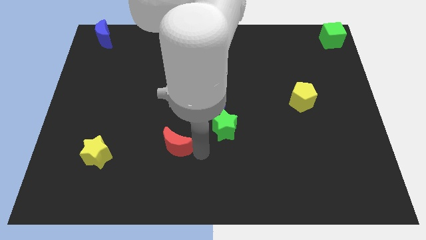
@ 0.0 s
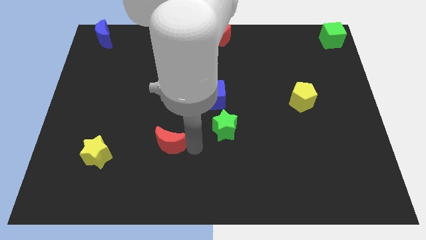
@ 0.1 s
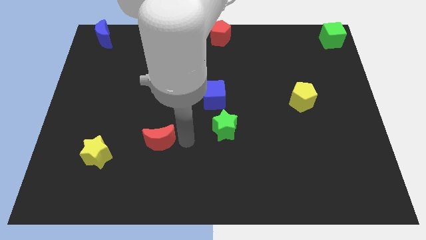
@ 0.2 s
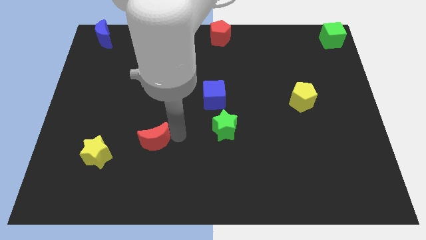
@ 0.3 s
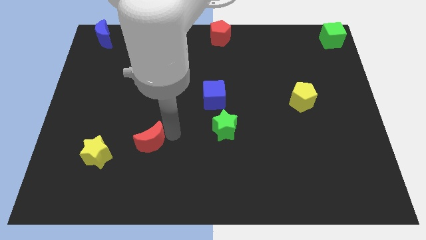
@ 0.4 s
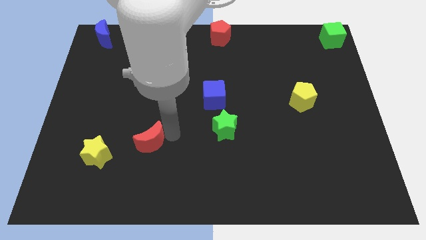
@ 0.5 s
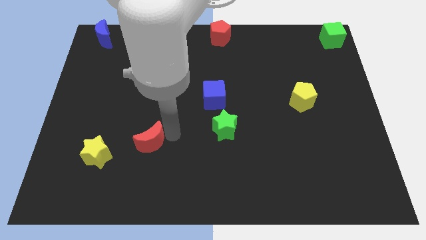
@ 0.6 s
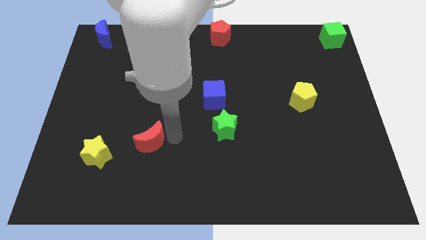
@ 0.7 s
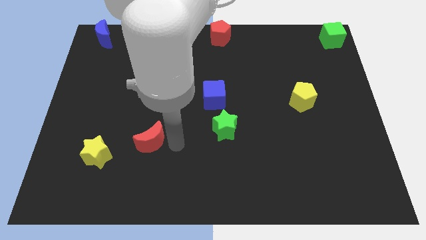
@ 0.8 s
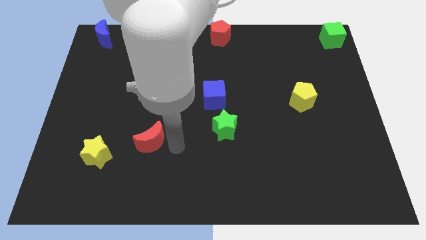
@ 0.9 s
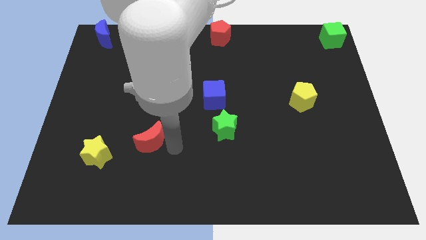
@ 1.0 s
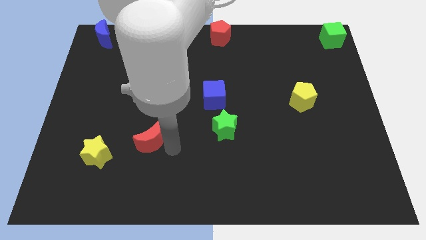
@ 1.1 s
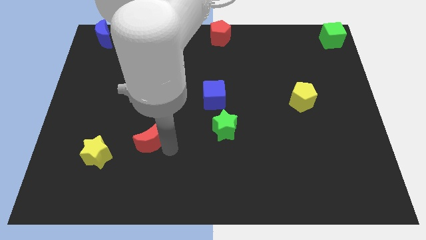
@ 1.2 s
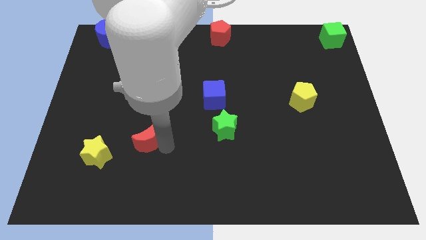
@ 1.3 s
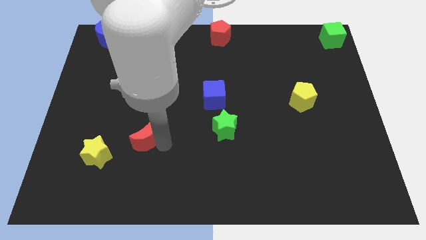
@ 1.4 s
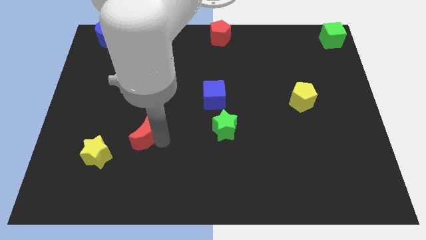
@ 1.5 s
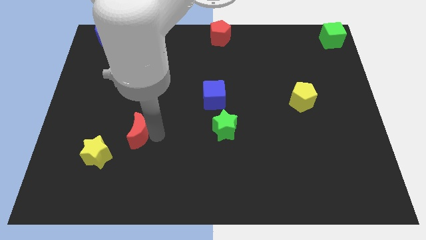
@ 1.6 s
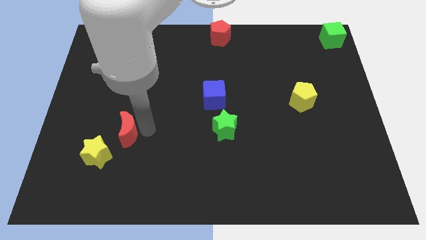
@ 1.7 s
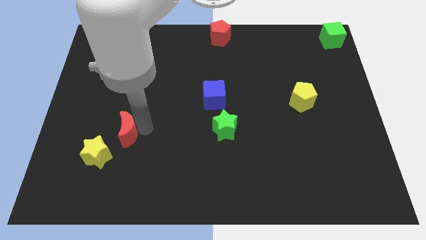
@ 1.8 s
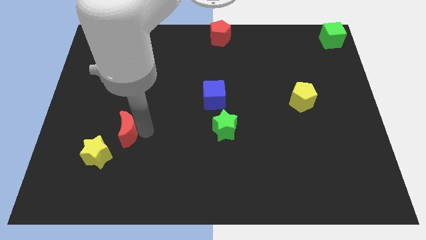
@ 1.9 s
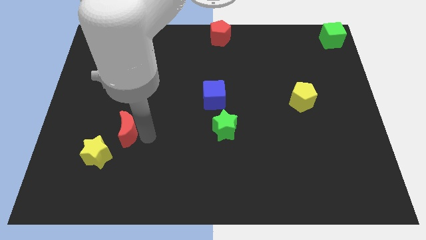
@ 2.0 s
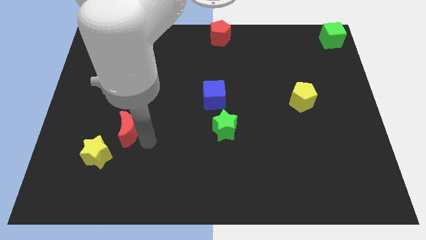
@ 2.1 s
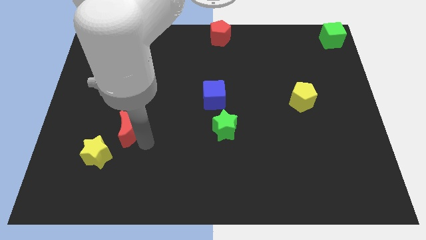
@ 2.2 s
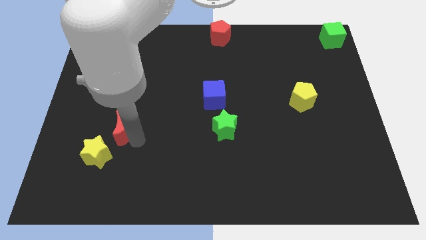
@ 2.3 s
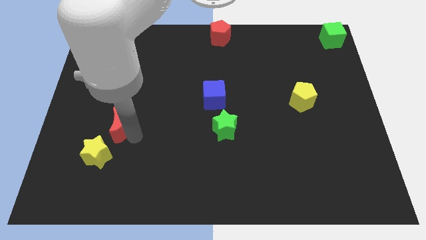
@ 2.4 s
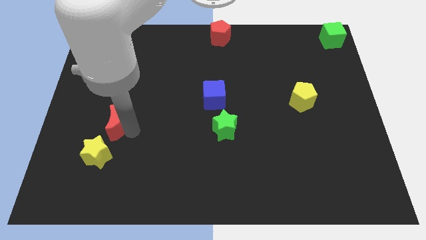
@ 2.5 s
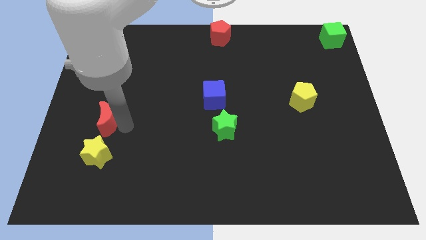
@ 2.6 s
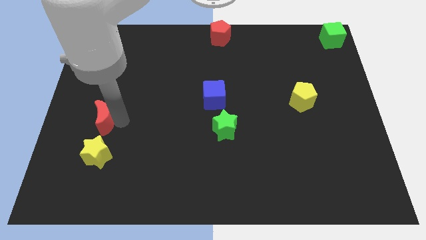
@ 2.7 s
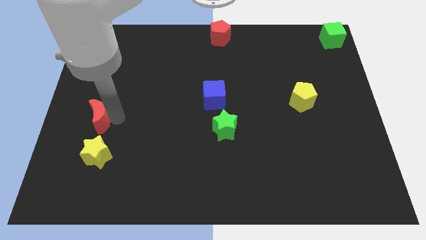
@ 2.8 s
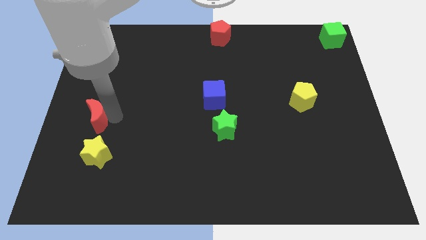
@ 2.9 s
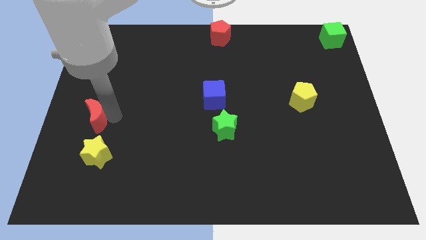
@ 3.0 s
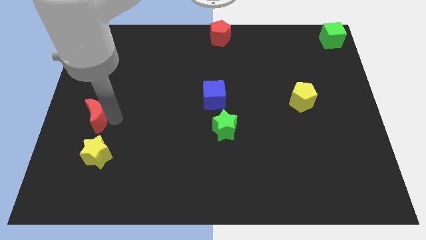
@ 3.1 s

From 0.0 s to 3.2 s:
place the red moon above the yellow star

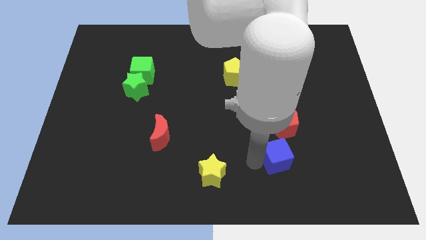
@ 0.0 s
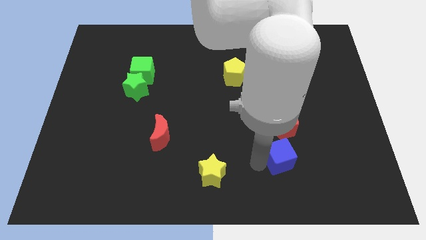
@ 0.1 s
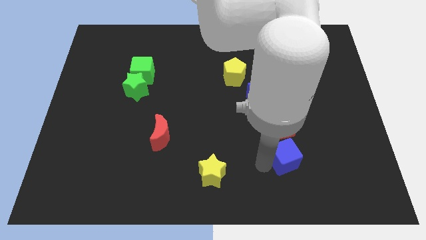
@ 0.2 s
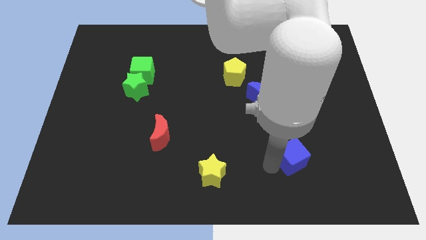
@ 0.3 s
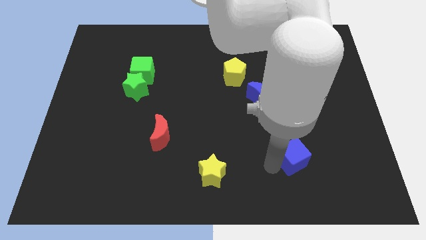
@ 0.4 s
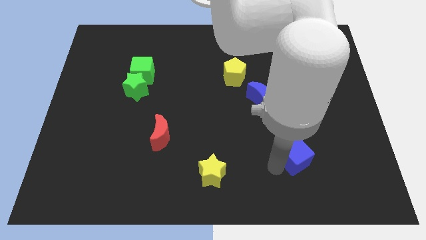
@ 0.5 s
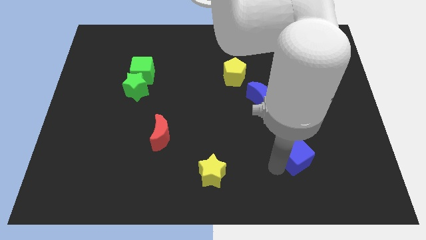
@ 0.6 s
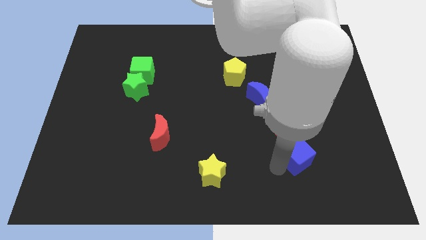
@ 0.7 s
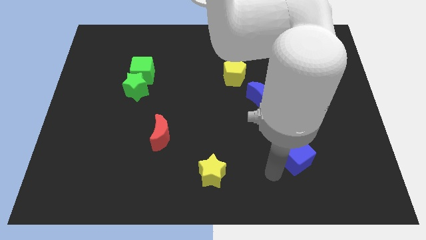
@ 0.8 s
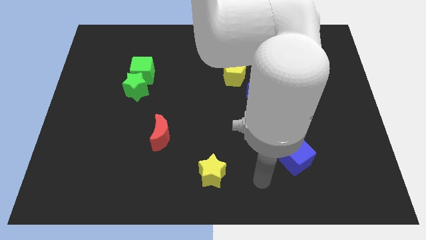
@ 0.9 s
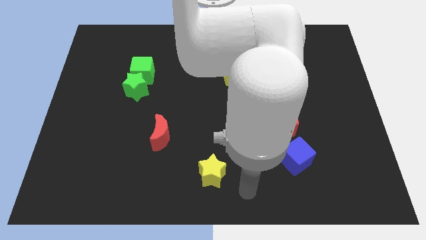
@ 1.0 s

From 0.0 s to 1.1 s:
place the blue cube to the bottom of the red pentagon

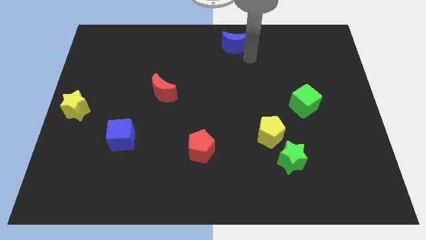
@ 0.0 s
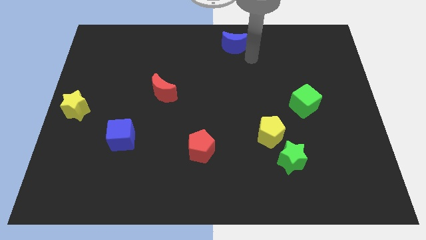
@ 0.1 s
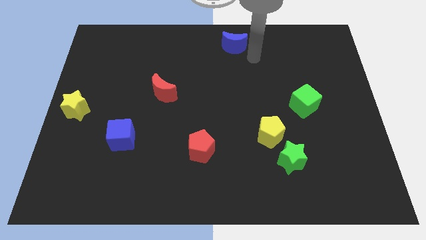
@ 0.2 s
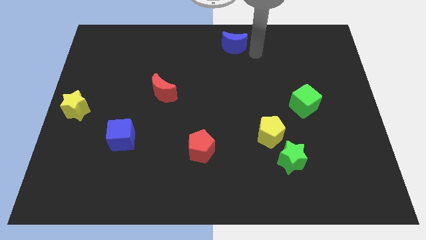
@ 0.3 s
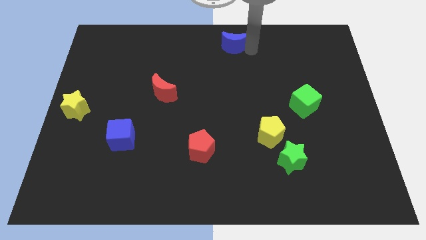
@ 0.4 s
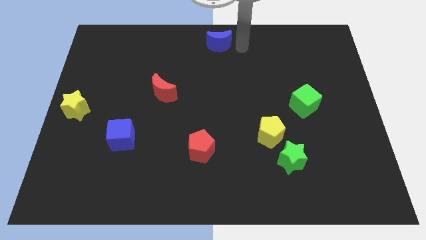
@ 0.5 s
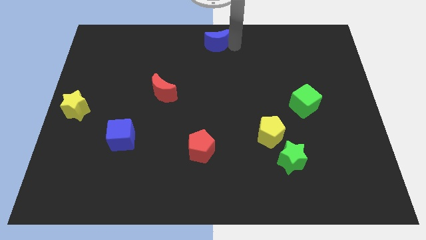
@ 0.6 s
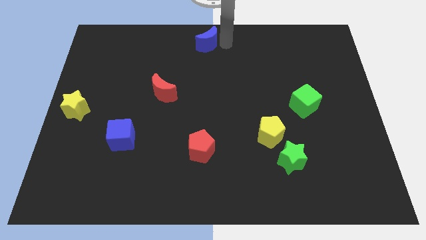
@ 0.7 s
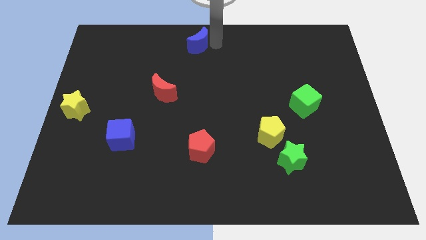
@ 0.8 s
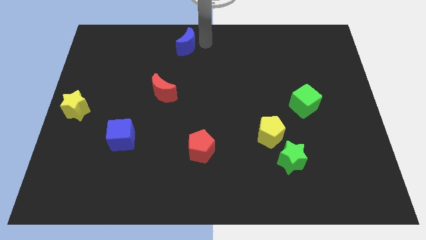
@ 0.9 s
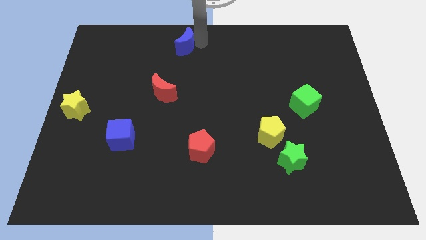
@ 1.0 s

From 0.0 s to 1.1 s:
place blue moon above the red moon

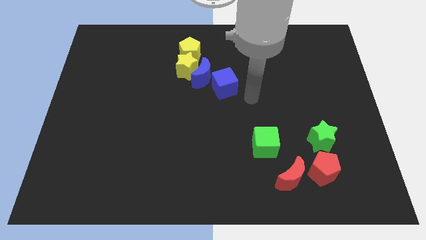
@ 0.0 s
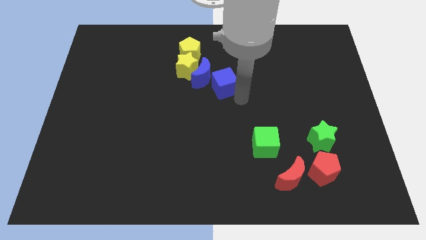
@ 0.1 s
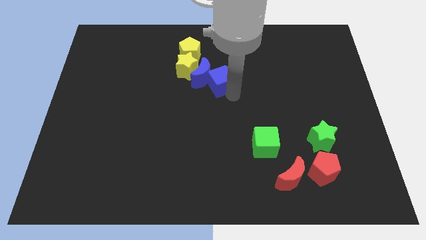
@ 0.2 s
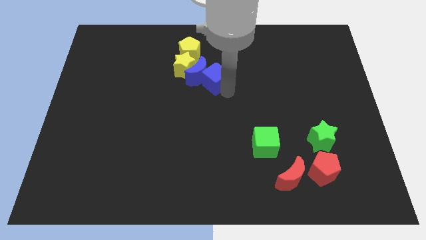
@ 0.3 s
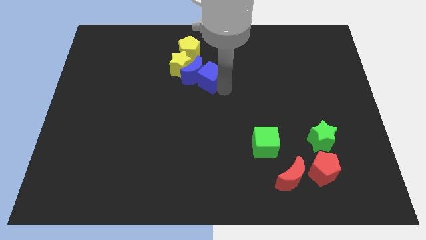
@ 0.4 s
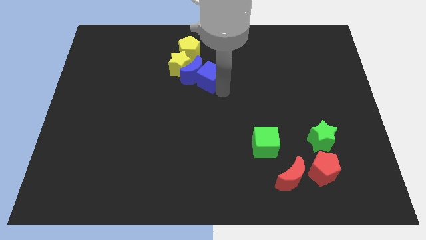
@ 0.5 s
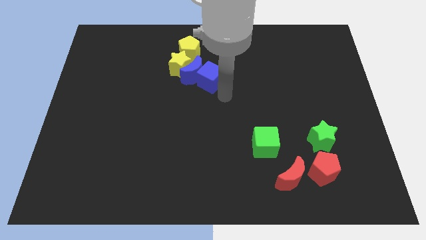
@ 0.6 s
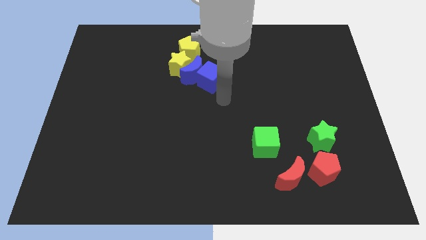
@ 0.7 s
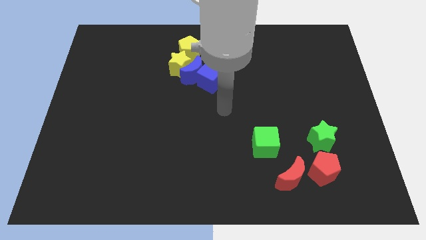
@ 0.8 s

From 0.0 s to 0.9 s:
push the blue cube into the blue moon

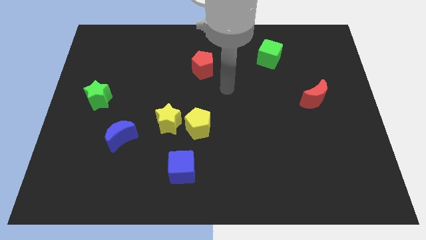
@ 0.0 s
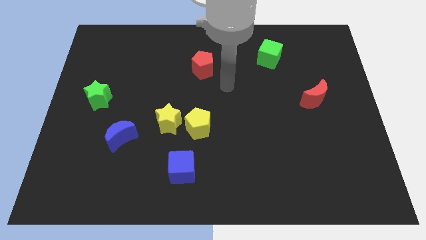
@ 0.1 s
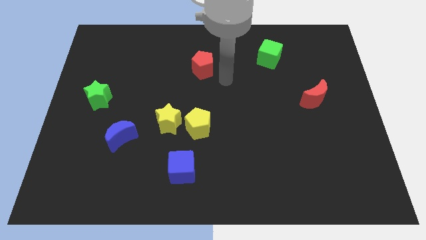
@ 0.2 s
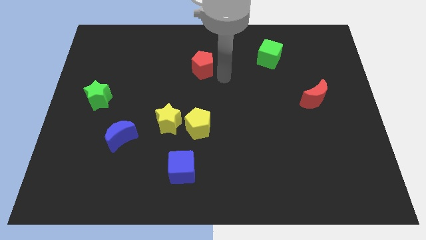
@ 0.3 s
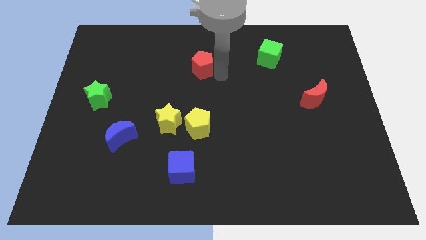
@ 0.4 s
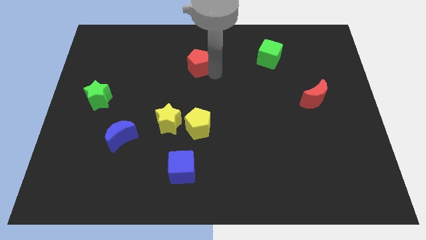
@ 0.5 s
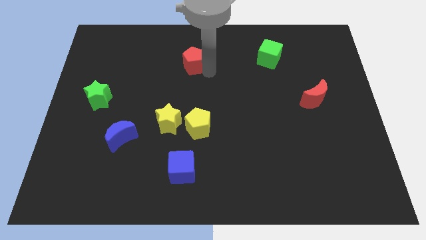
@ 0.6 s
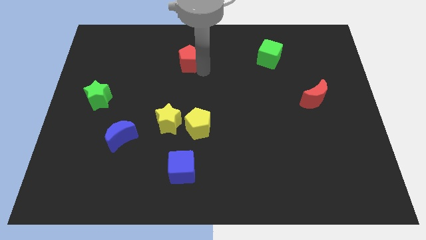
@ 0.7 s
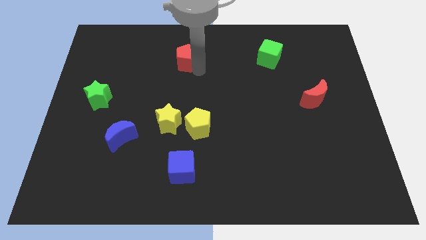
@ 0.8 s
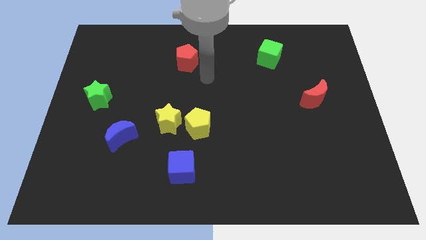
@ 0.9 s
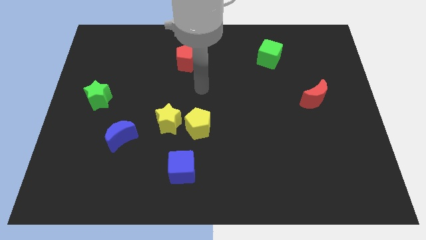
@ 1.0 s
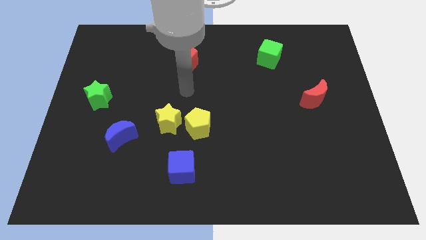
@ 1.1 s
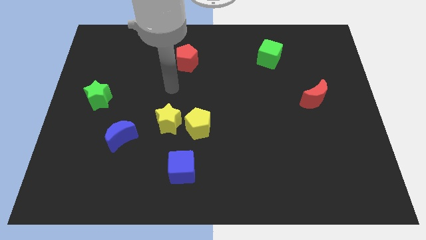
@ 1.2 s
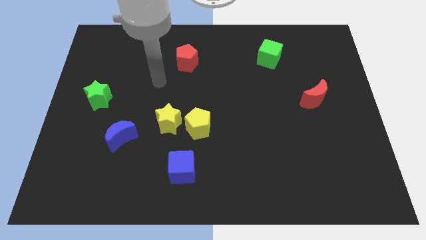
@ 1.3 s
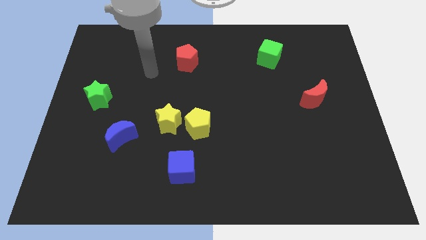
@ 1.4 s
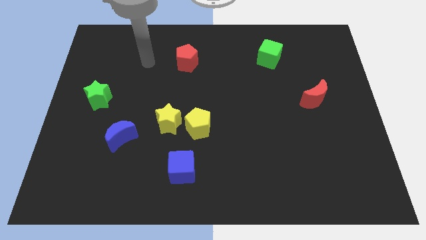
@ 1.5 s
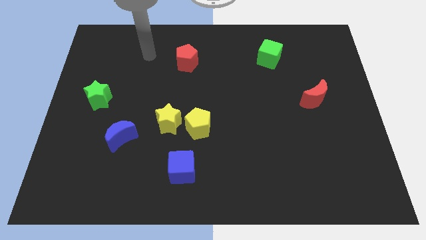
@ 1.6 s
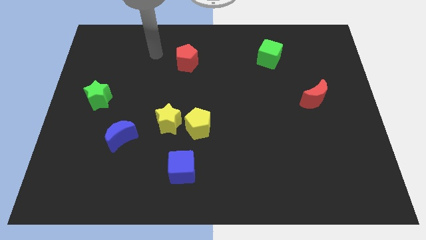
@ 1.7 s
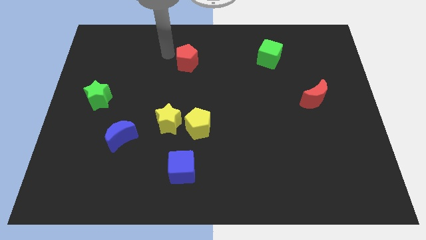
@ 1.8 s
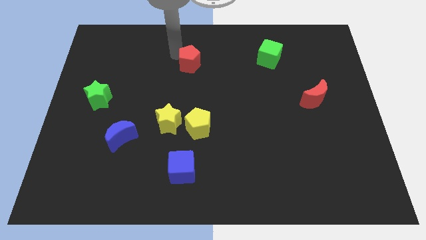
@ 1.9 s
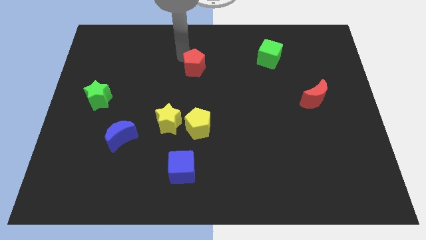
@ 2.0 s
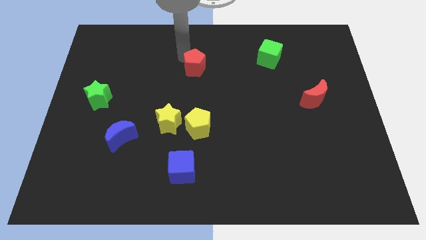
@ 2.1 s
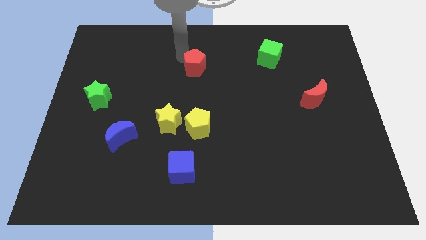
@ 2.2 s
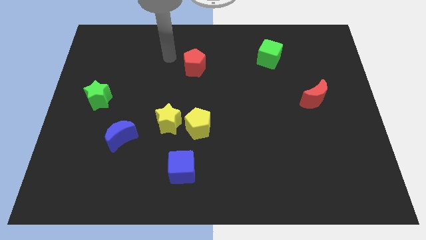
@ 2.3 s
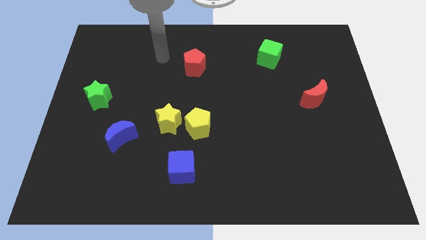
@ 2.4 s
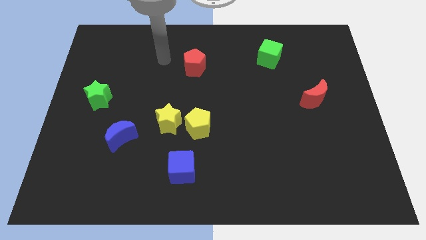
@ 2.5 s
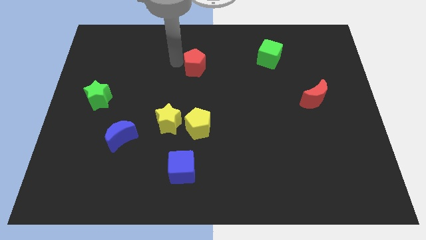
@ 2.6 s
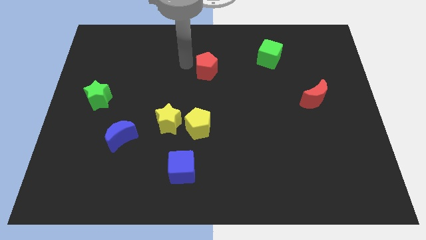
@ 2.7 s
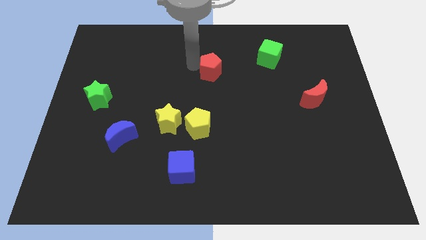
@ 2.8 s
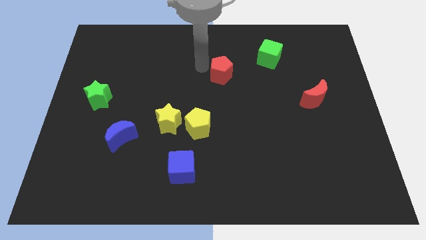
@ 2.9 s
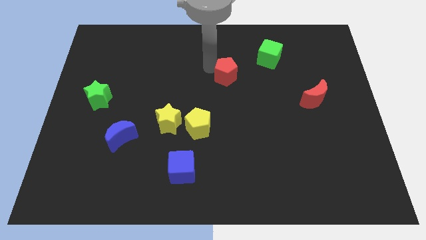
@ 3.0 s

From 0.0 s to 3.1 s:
move red pentagon towards red moon
